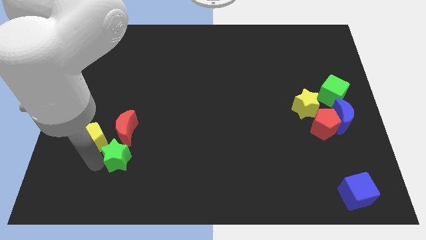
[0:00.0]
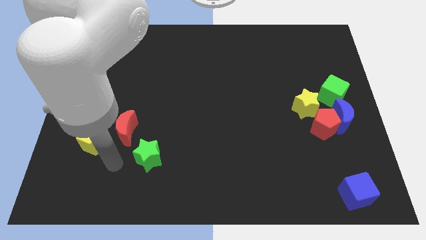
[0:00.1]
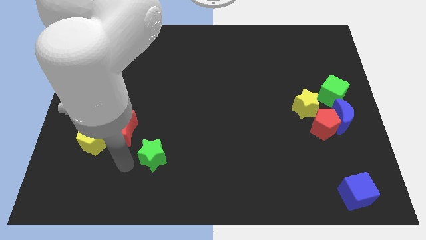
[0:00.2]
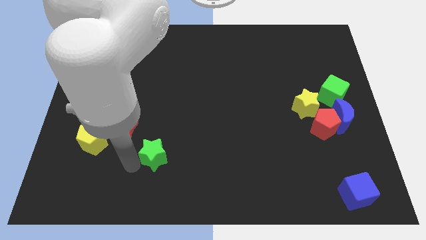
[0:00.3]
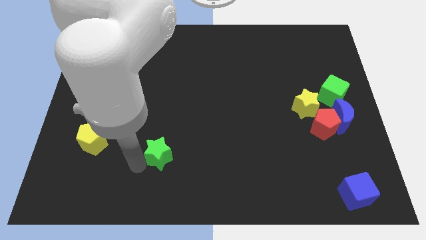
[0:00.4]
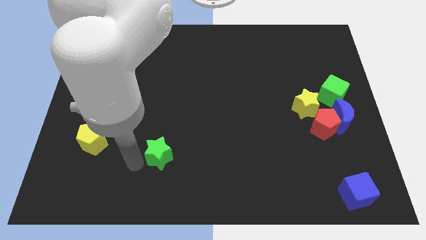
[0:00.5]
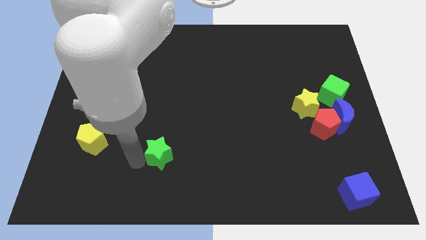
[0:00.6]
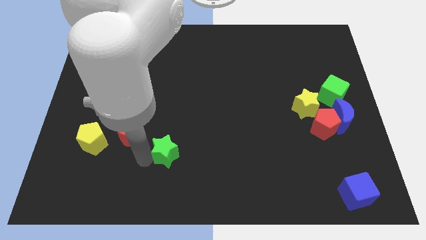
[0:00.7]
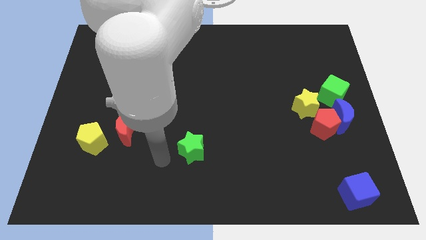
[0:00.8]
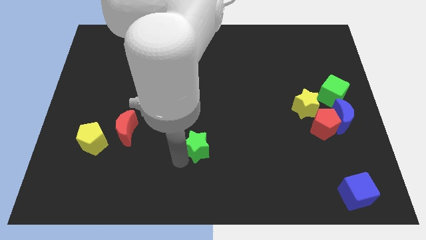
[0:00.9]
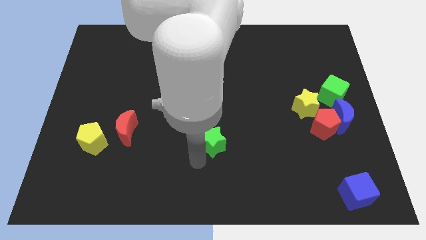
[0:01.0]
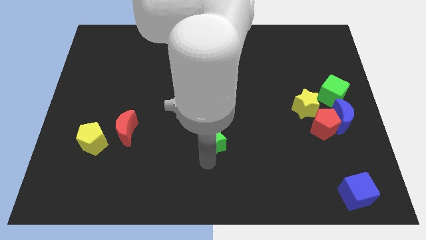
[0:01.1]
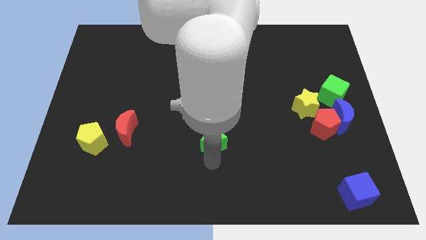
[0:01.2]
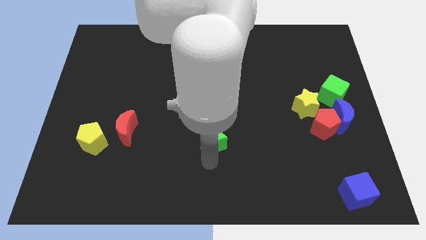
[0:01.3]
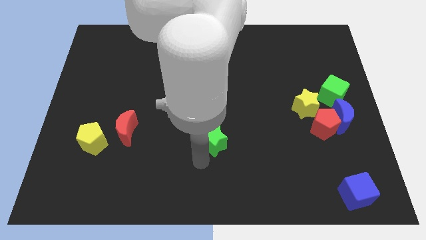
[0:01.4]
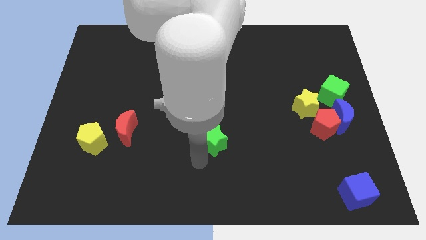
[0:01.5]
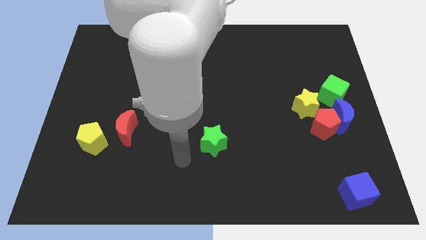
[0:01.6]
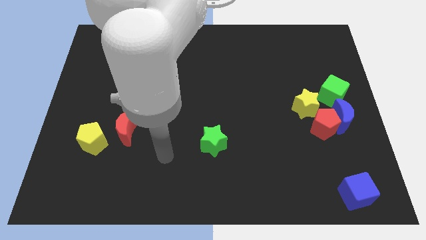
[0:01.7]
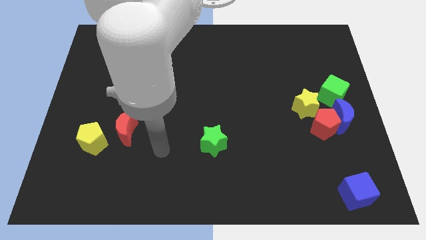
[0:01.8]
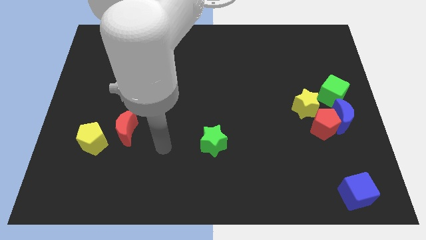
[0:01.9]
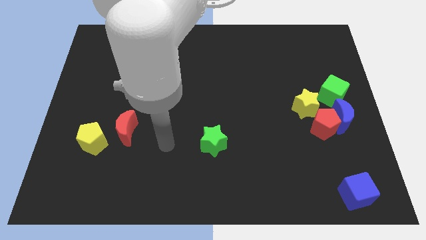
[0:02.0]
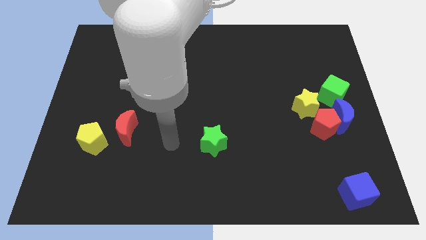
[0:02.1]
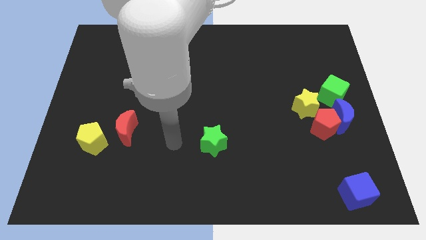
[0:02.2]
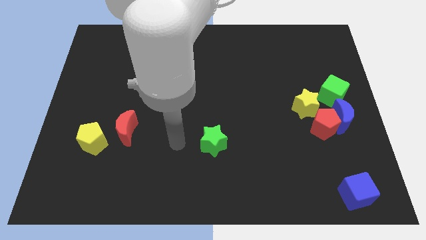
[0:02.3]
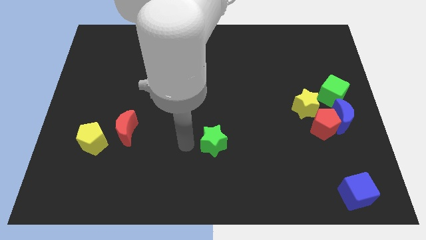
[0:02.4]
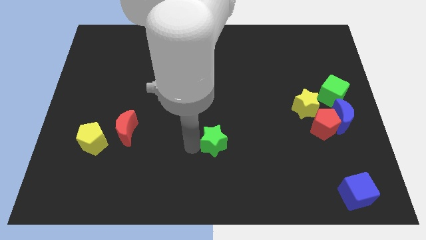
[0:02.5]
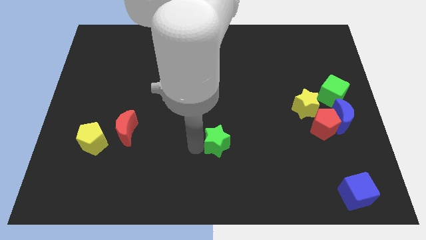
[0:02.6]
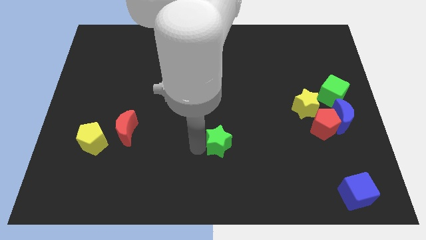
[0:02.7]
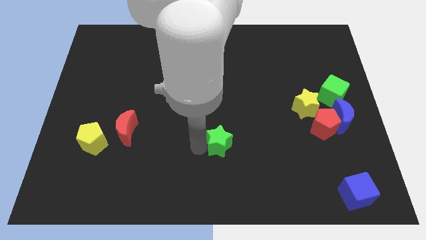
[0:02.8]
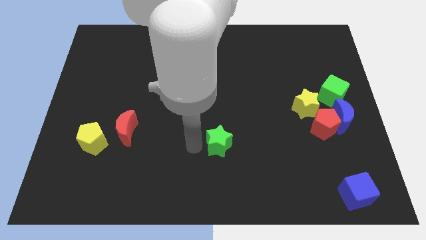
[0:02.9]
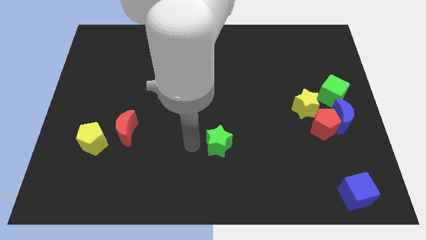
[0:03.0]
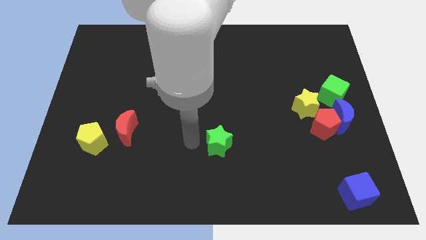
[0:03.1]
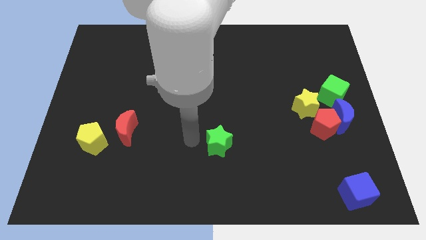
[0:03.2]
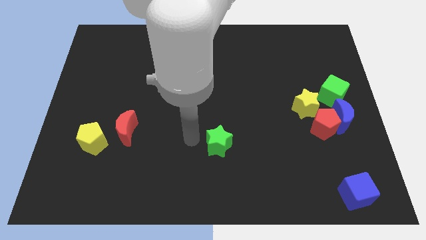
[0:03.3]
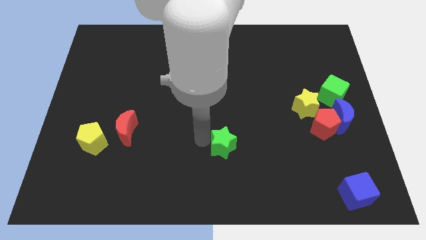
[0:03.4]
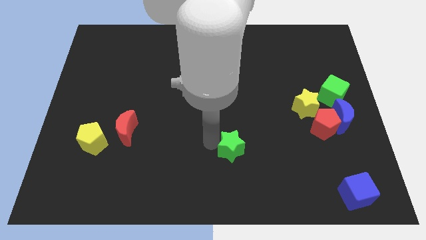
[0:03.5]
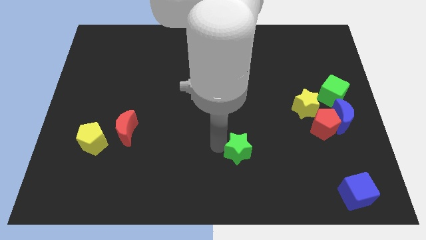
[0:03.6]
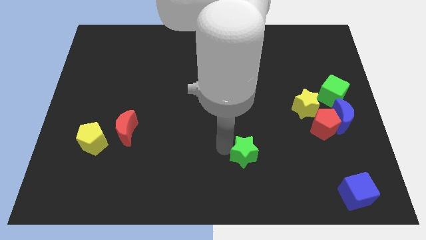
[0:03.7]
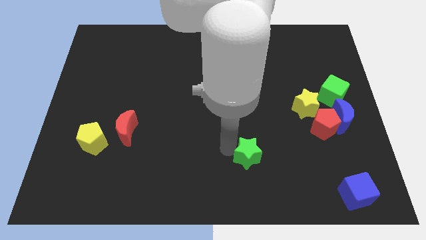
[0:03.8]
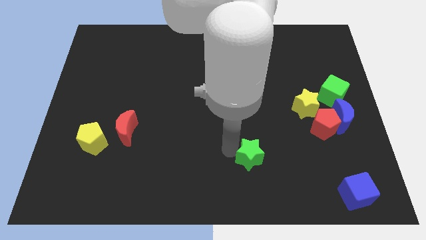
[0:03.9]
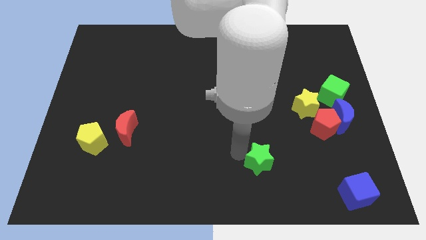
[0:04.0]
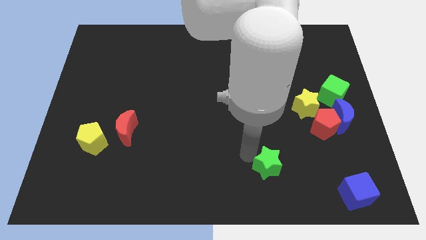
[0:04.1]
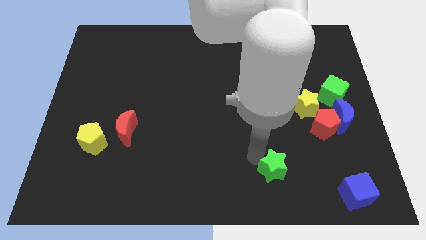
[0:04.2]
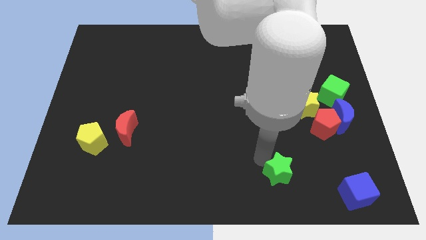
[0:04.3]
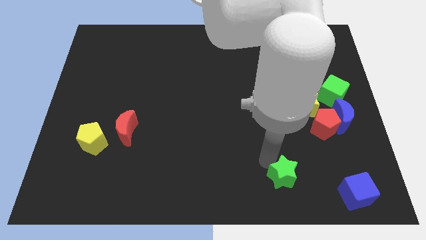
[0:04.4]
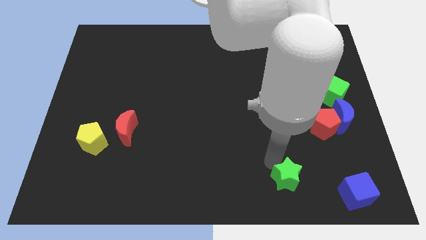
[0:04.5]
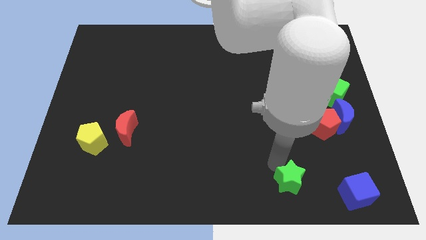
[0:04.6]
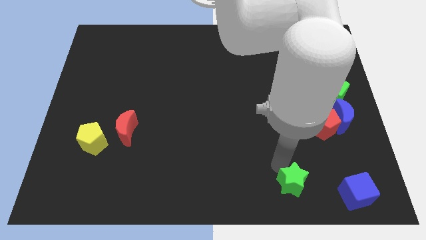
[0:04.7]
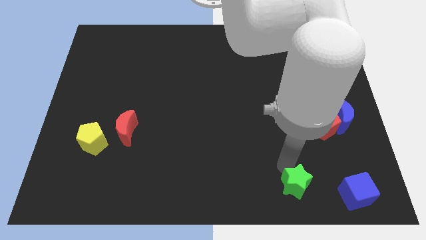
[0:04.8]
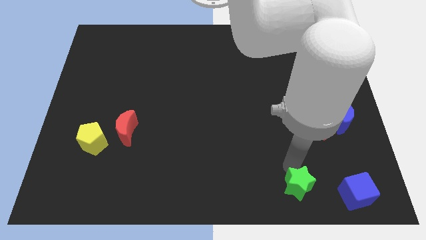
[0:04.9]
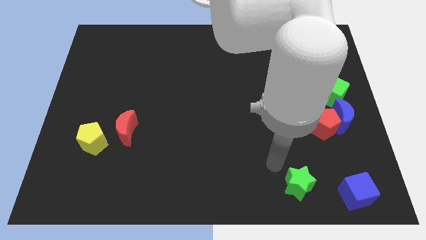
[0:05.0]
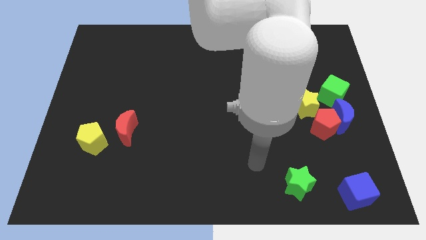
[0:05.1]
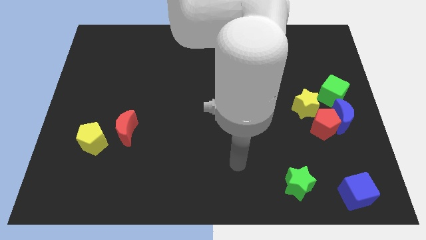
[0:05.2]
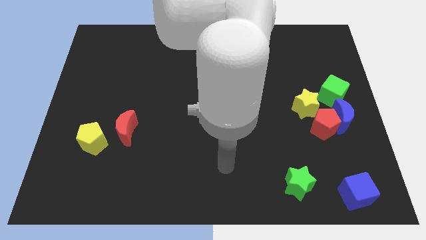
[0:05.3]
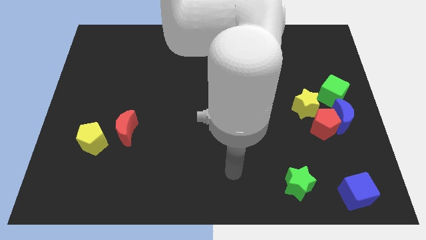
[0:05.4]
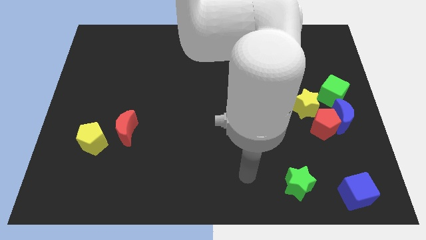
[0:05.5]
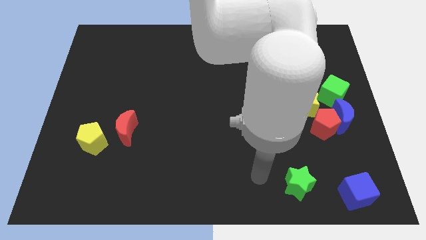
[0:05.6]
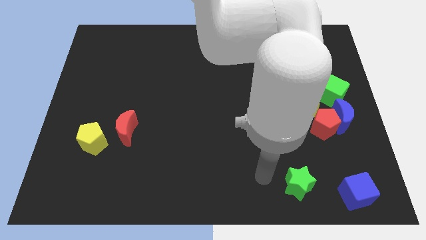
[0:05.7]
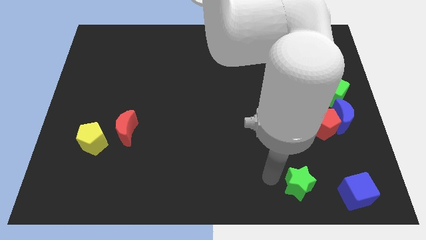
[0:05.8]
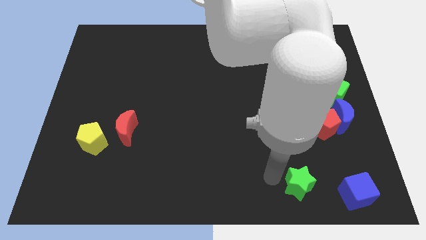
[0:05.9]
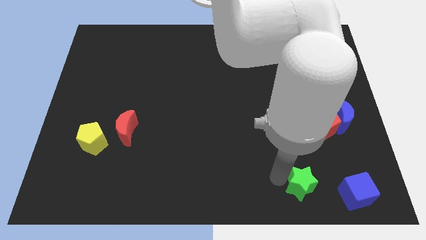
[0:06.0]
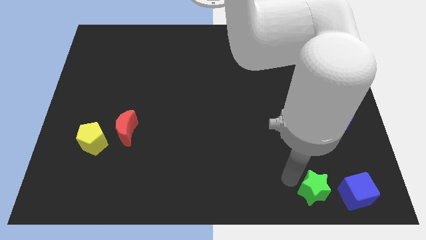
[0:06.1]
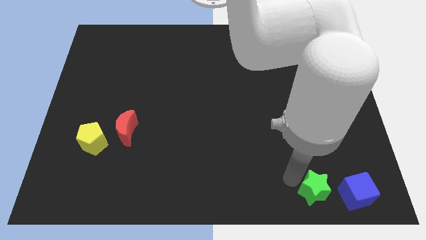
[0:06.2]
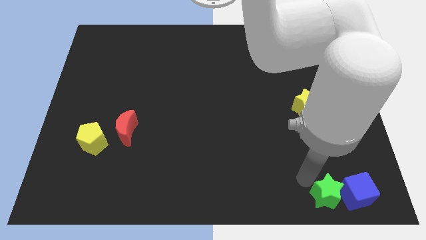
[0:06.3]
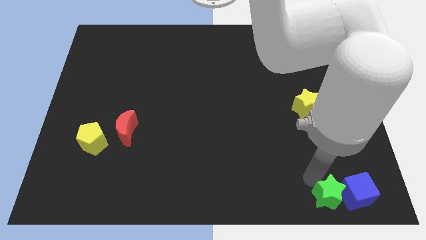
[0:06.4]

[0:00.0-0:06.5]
push green star beside blue cube

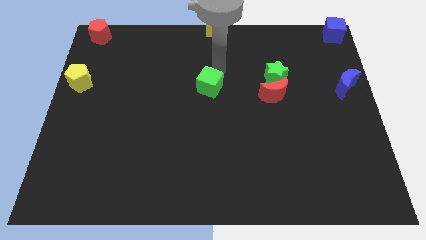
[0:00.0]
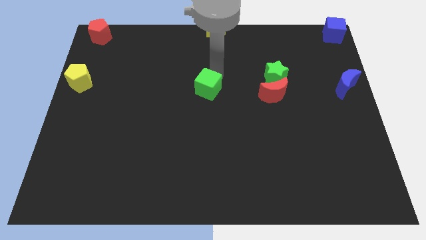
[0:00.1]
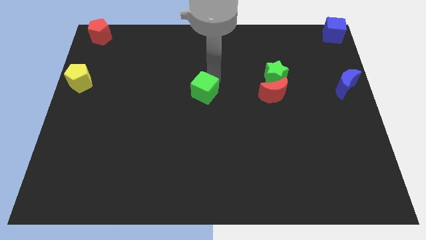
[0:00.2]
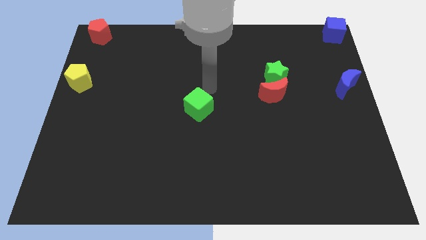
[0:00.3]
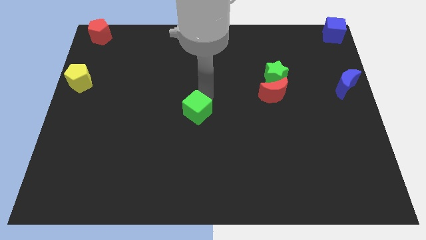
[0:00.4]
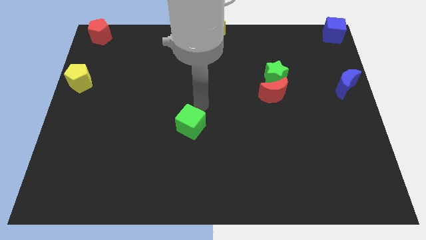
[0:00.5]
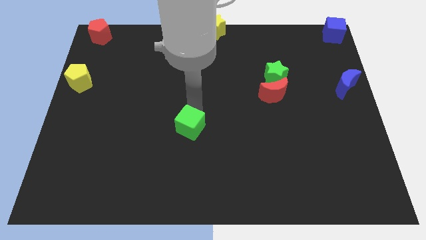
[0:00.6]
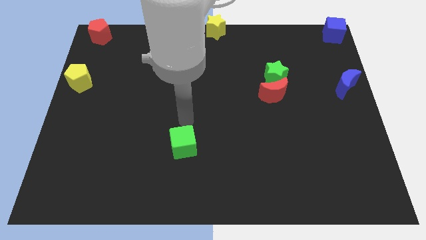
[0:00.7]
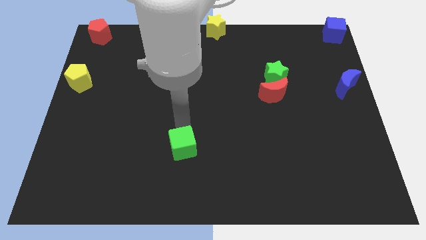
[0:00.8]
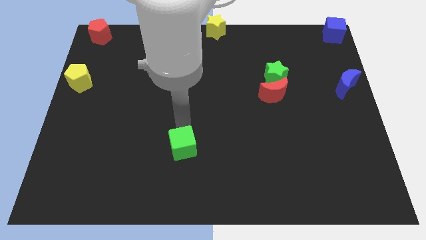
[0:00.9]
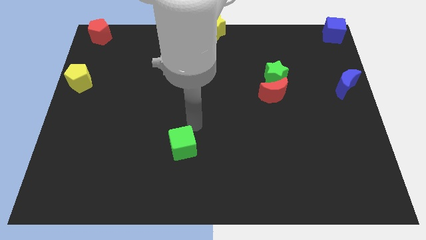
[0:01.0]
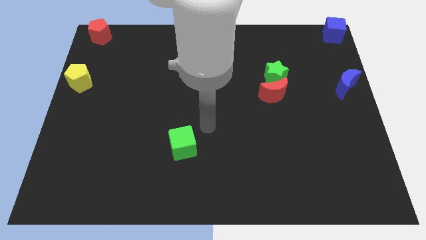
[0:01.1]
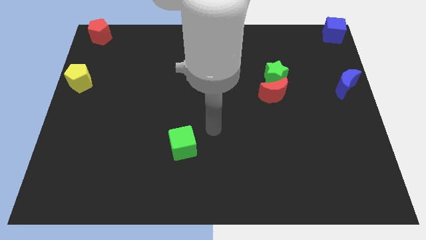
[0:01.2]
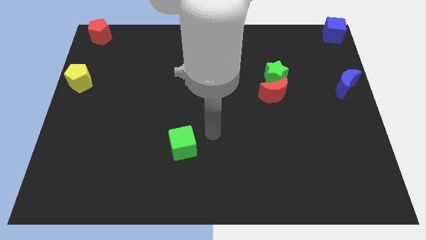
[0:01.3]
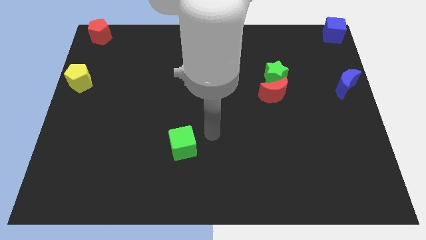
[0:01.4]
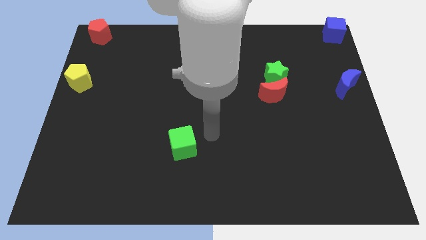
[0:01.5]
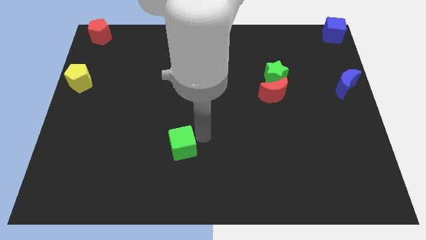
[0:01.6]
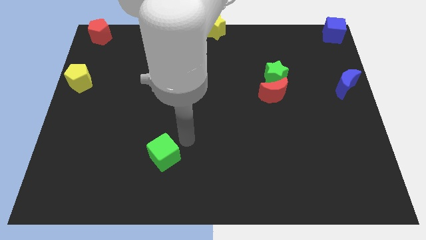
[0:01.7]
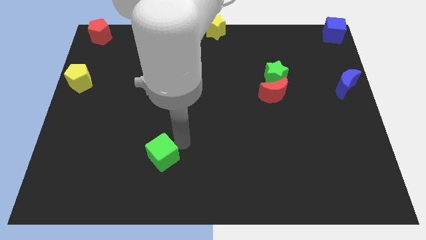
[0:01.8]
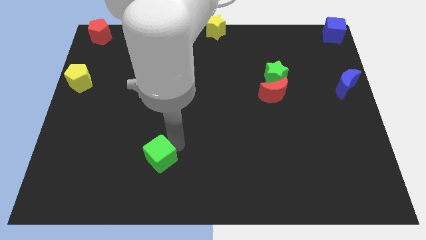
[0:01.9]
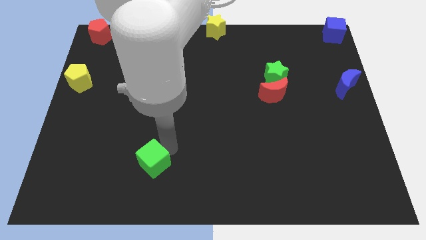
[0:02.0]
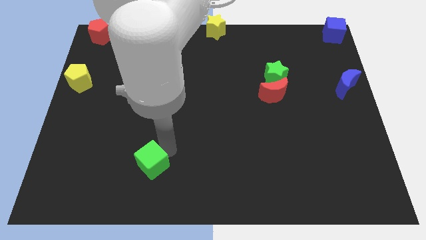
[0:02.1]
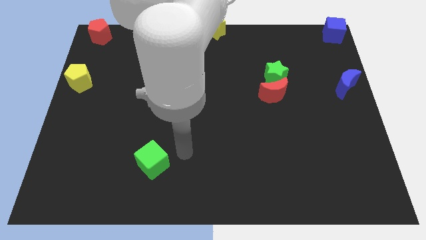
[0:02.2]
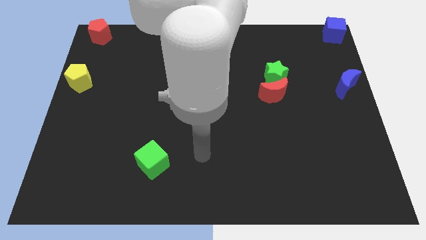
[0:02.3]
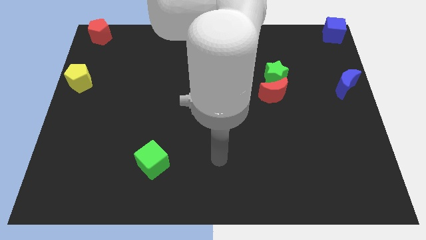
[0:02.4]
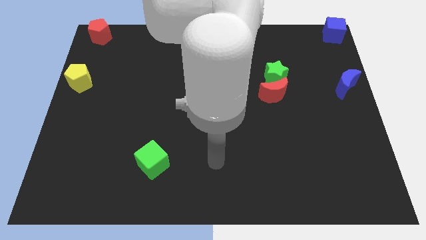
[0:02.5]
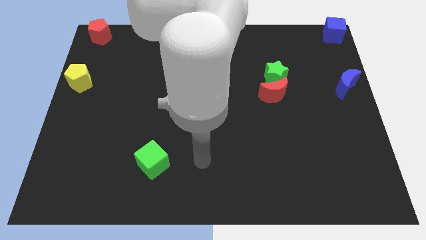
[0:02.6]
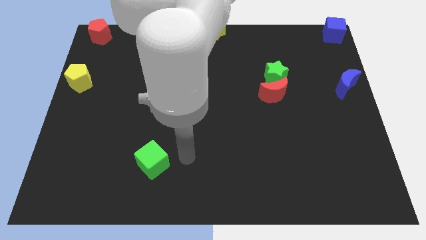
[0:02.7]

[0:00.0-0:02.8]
push the green cube towards the bottom left corner
